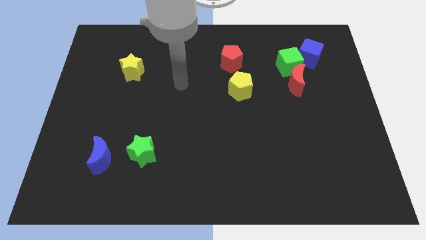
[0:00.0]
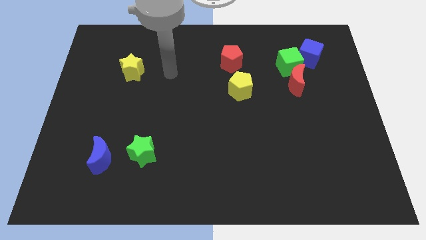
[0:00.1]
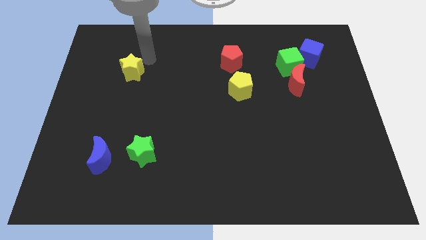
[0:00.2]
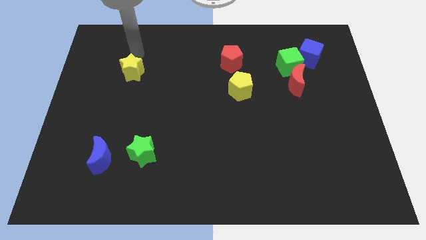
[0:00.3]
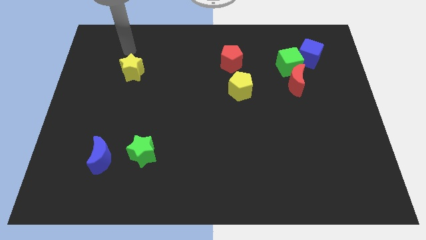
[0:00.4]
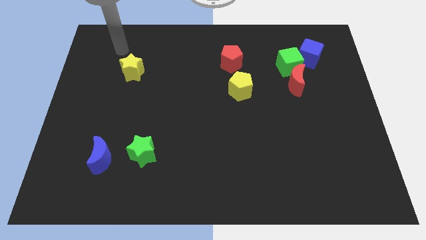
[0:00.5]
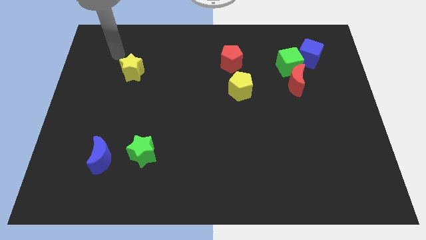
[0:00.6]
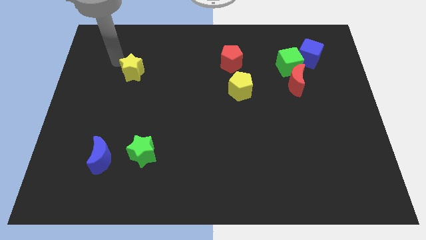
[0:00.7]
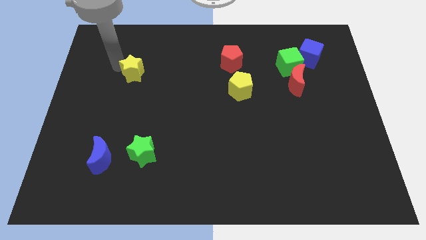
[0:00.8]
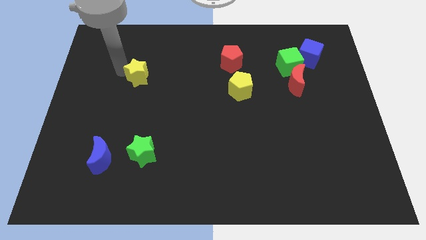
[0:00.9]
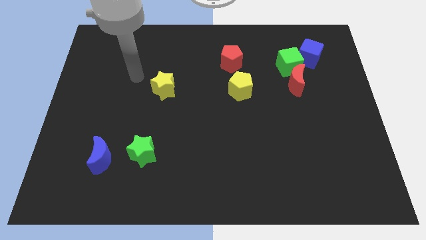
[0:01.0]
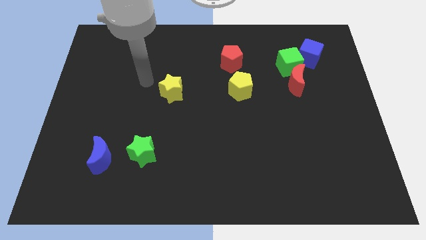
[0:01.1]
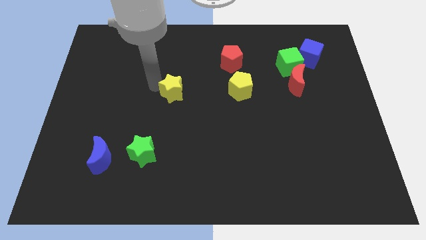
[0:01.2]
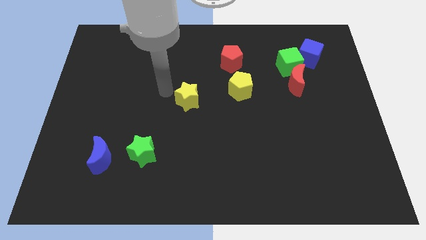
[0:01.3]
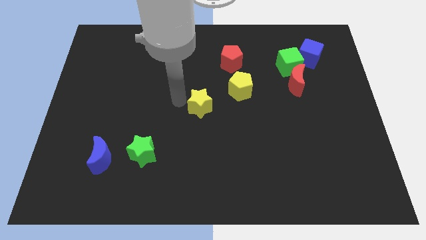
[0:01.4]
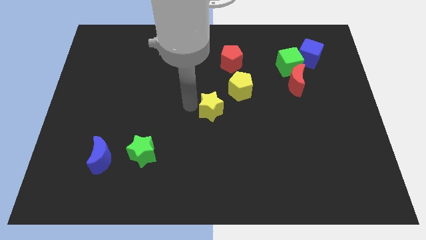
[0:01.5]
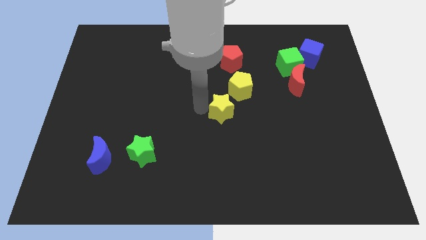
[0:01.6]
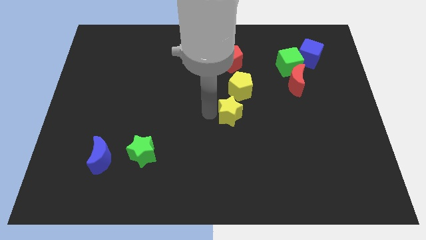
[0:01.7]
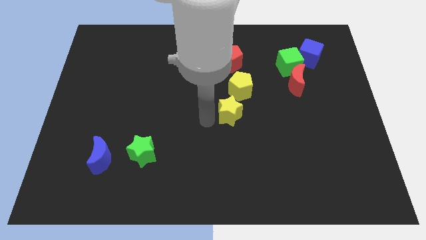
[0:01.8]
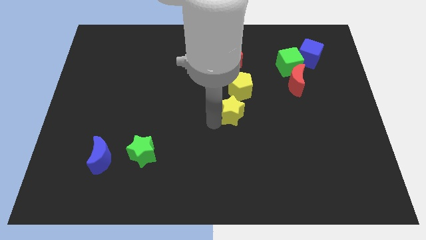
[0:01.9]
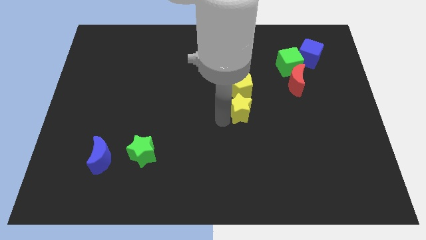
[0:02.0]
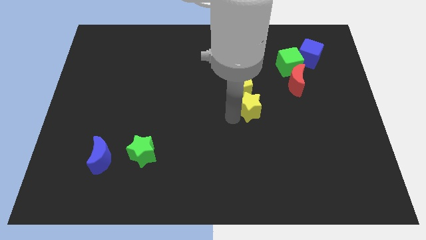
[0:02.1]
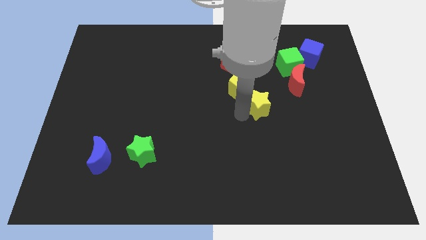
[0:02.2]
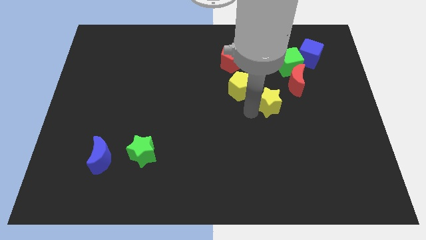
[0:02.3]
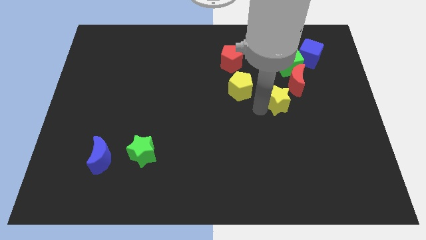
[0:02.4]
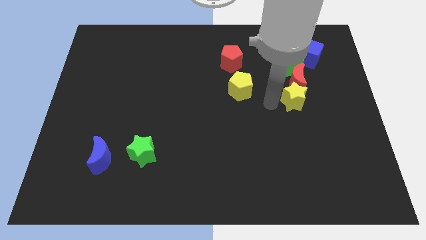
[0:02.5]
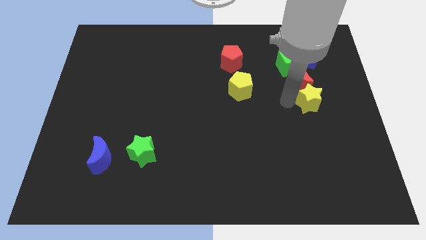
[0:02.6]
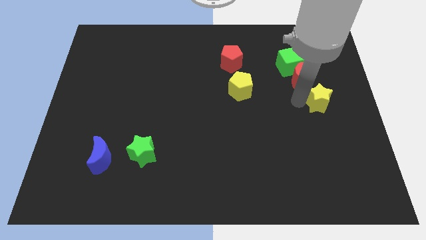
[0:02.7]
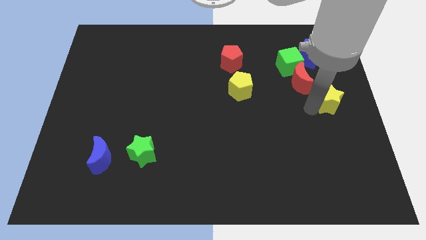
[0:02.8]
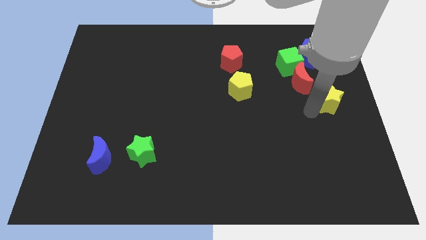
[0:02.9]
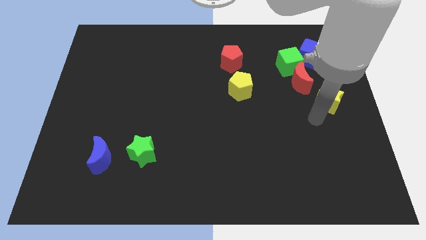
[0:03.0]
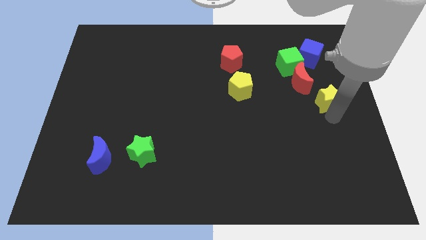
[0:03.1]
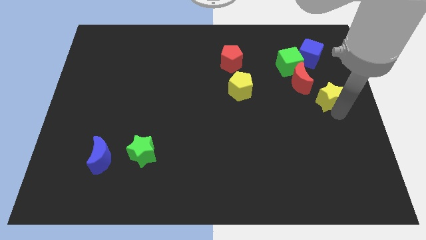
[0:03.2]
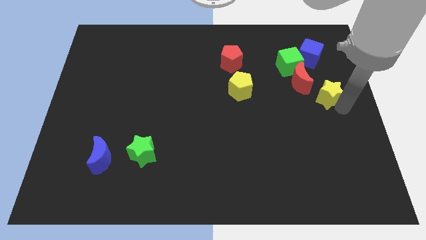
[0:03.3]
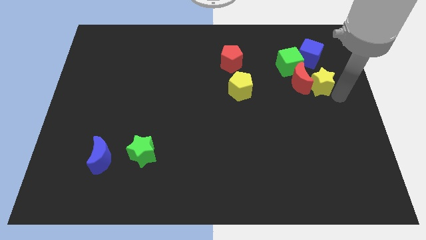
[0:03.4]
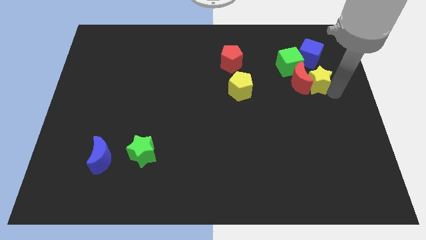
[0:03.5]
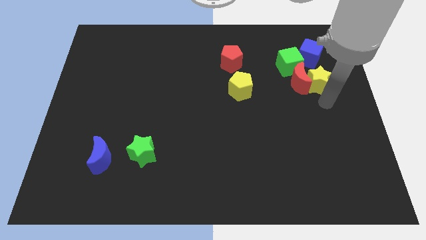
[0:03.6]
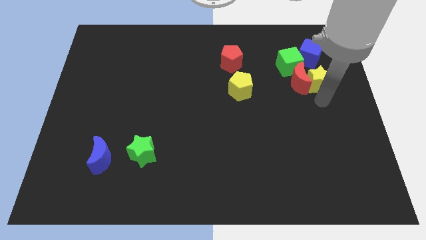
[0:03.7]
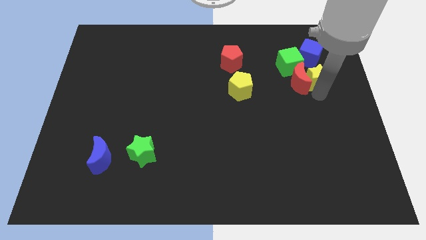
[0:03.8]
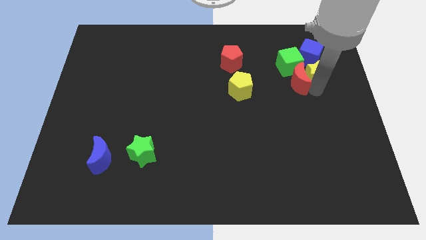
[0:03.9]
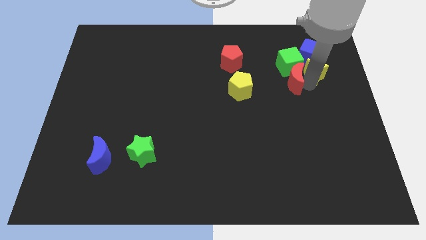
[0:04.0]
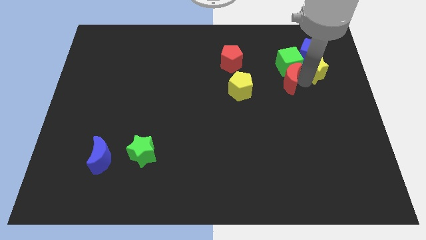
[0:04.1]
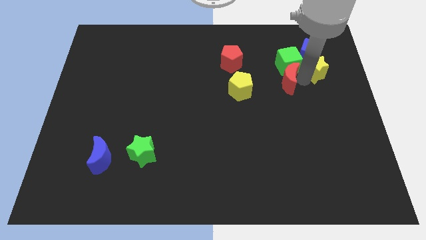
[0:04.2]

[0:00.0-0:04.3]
push the yellow star to the blue cube

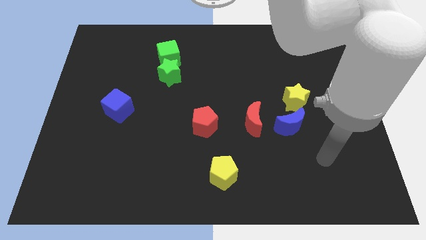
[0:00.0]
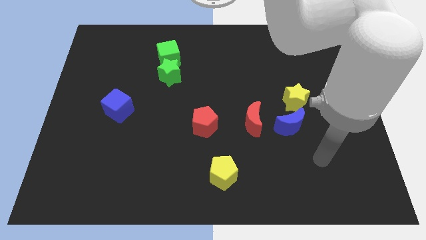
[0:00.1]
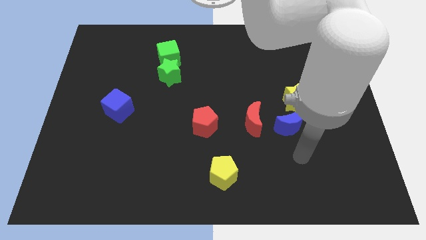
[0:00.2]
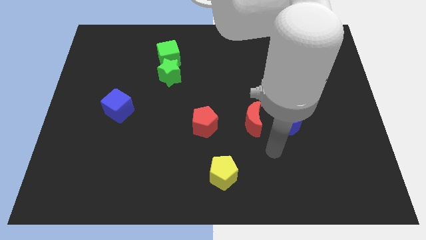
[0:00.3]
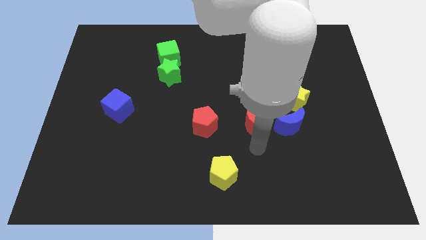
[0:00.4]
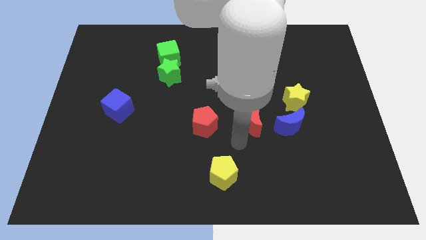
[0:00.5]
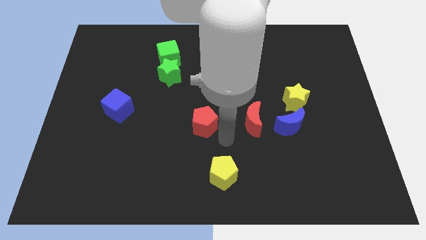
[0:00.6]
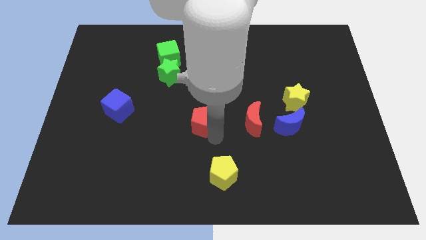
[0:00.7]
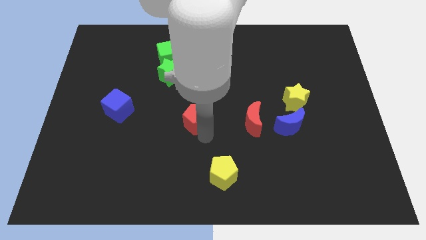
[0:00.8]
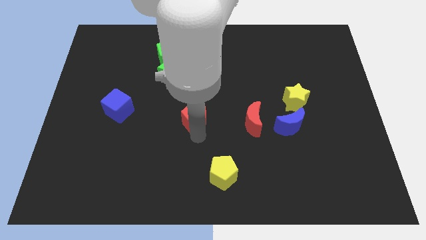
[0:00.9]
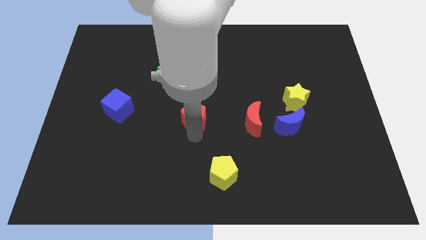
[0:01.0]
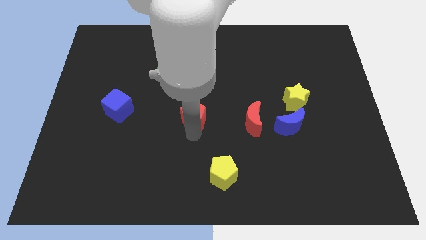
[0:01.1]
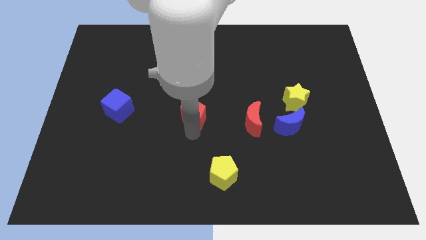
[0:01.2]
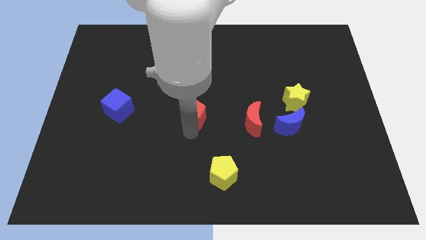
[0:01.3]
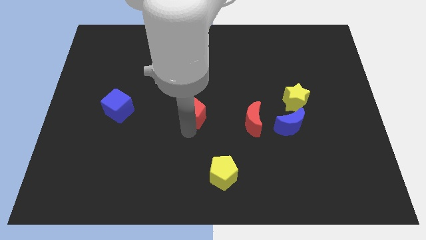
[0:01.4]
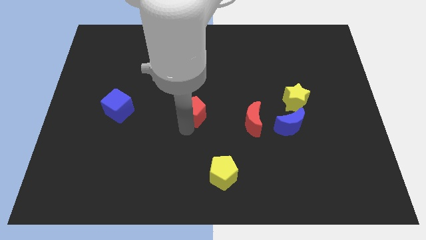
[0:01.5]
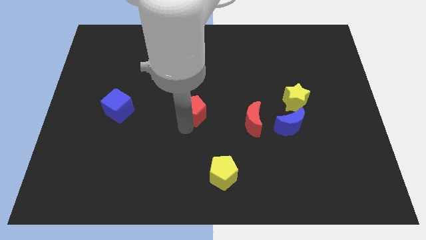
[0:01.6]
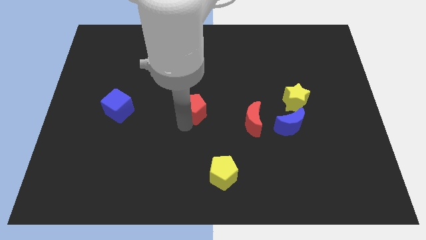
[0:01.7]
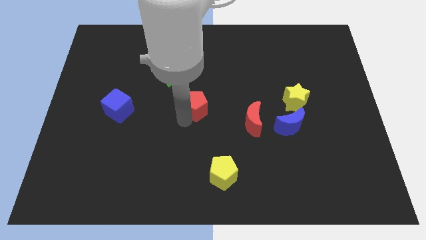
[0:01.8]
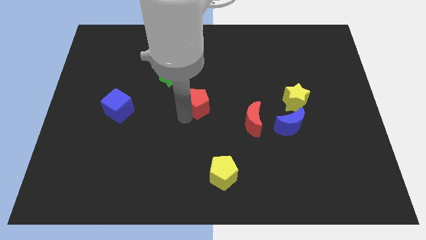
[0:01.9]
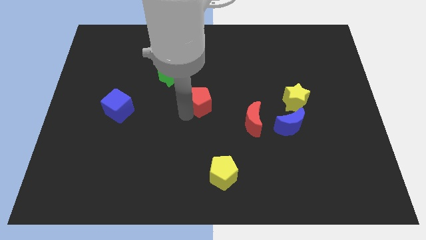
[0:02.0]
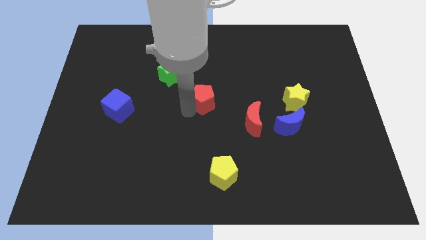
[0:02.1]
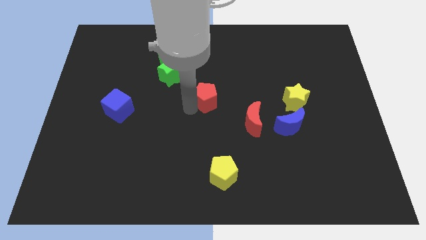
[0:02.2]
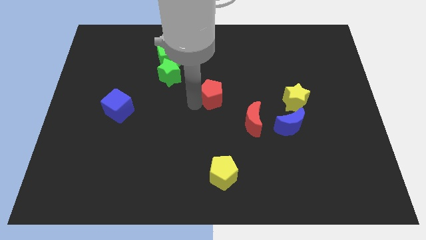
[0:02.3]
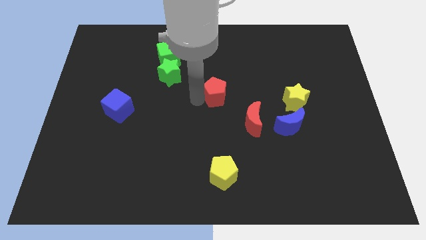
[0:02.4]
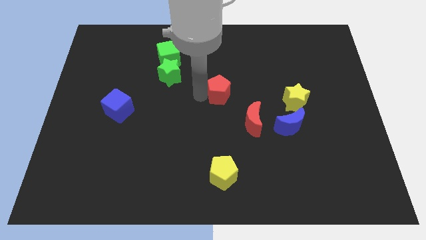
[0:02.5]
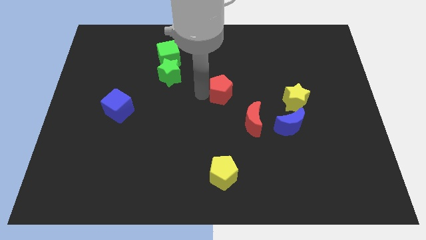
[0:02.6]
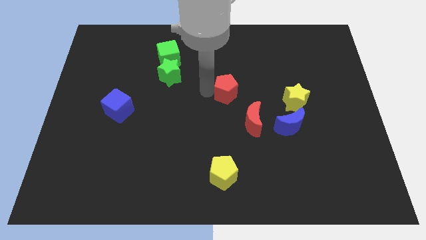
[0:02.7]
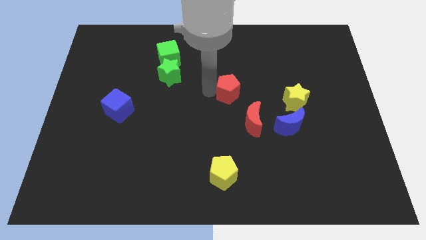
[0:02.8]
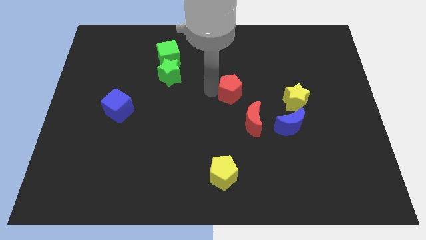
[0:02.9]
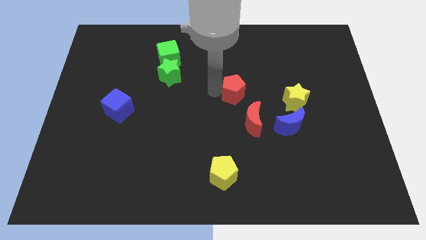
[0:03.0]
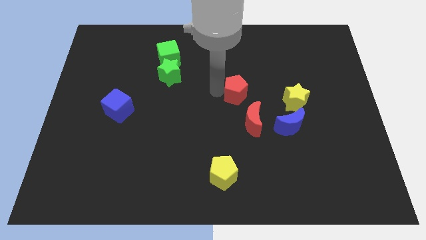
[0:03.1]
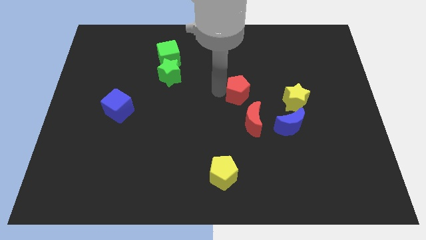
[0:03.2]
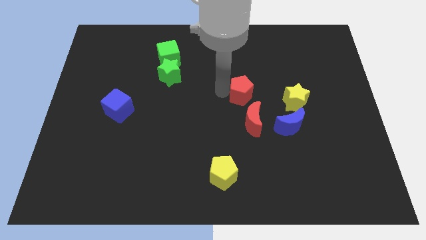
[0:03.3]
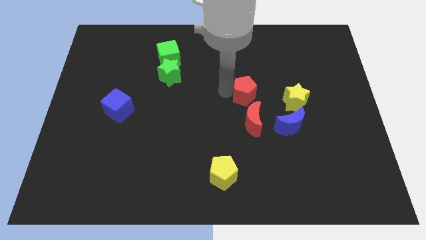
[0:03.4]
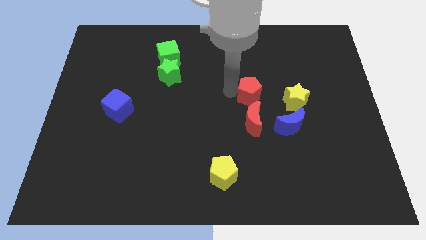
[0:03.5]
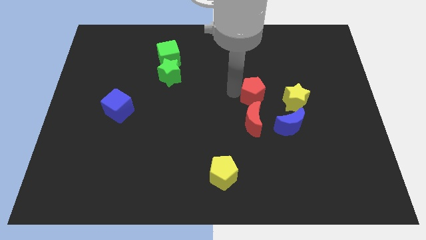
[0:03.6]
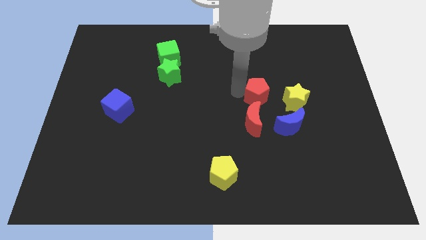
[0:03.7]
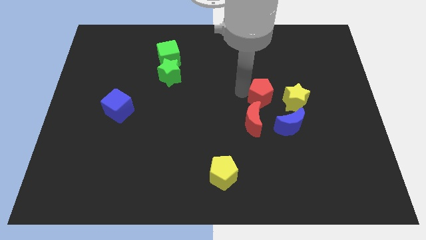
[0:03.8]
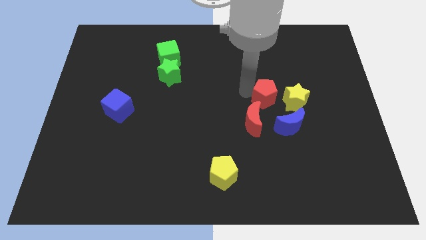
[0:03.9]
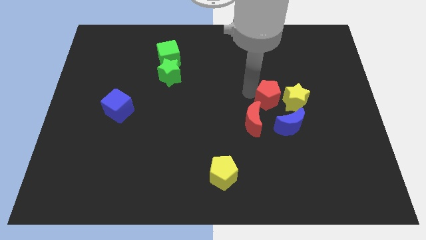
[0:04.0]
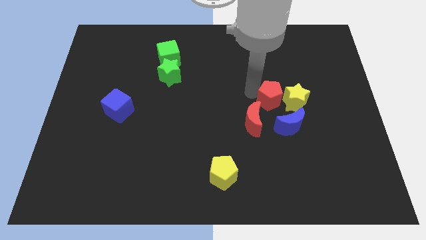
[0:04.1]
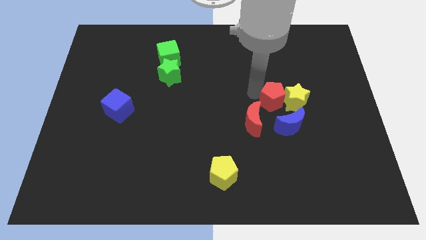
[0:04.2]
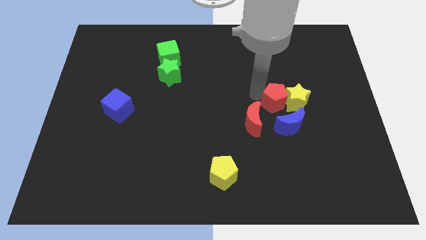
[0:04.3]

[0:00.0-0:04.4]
put the red pentagon close to the yellow star
